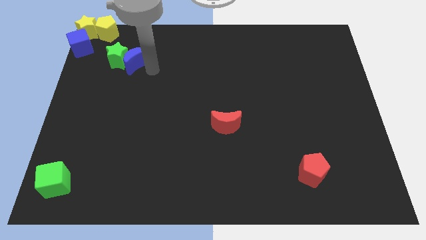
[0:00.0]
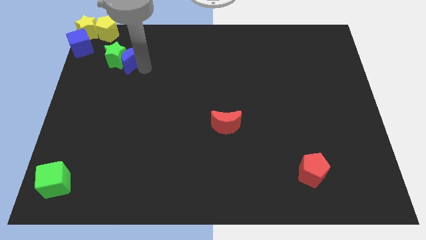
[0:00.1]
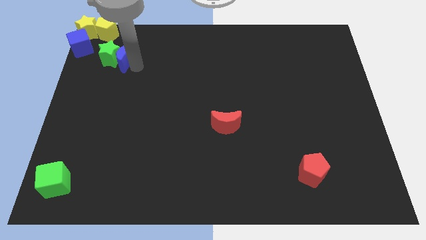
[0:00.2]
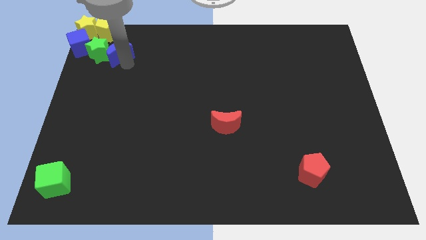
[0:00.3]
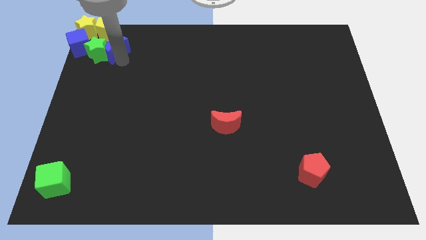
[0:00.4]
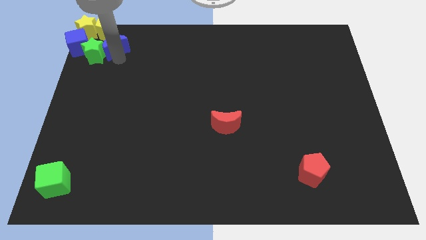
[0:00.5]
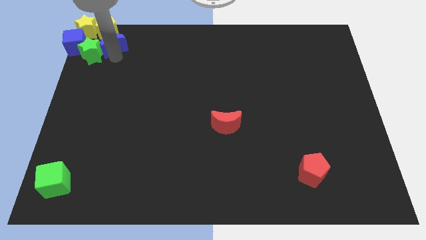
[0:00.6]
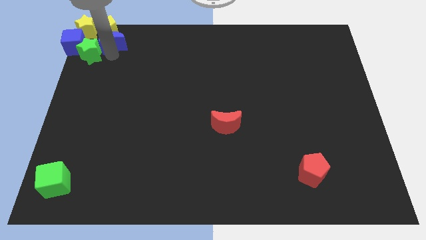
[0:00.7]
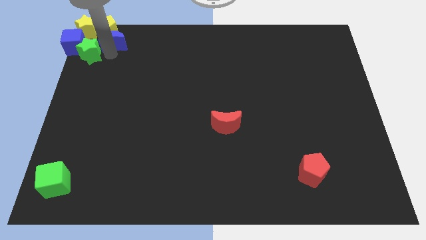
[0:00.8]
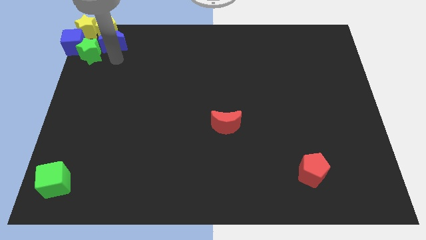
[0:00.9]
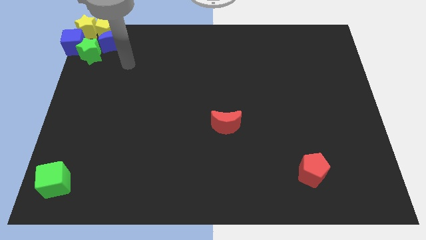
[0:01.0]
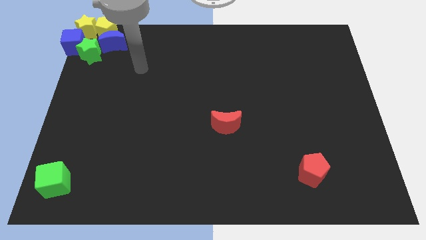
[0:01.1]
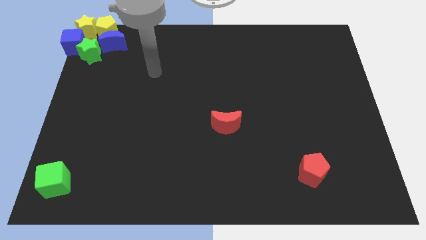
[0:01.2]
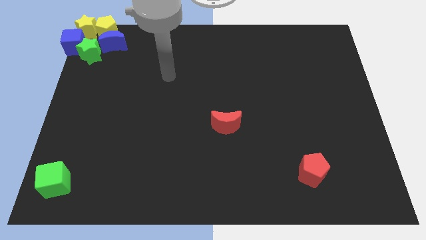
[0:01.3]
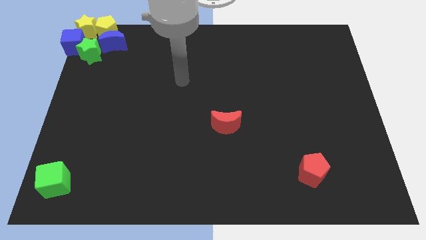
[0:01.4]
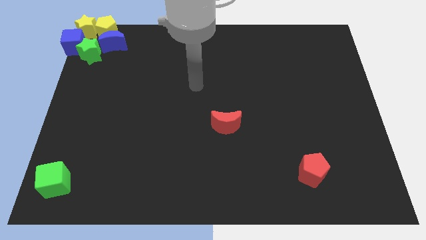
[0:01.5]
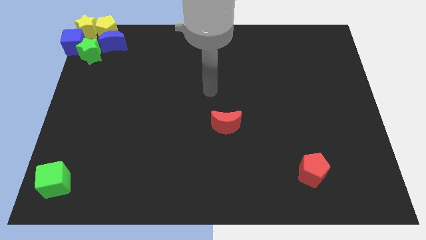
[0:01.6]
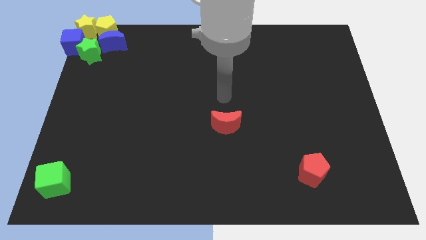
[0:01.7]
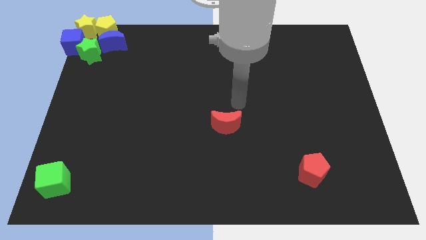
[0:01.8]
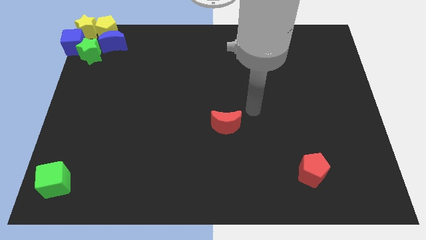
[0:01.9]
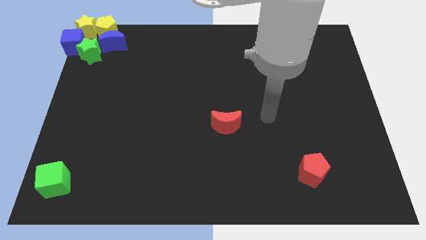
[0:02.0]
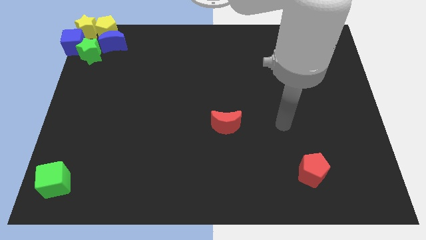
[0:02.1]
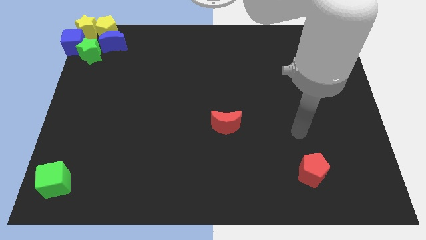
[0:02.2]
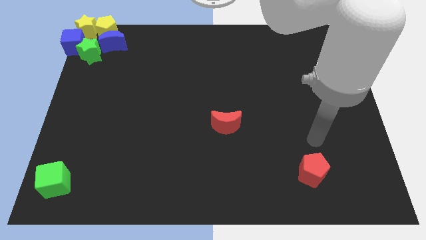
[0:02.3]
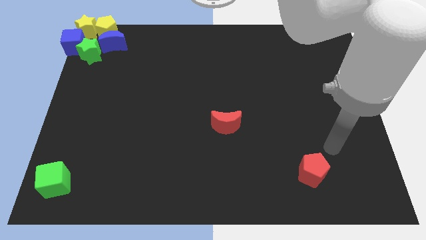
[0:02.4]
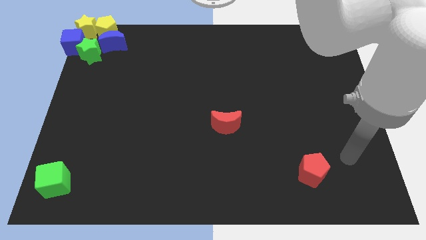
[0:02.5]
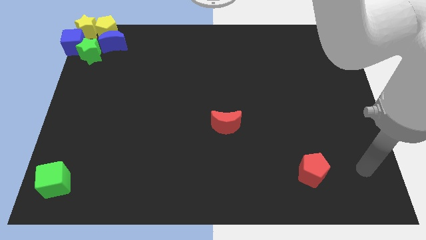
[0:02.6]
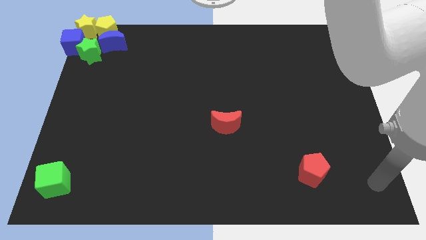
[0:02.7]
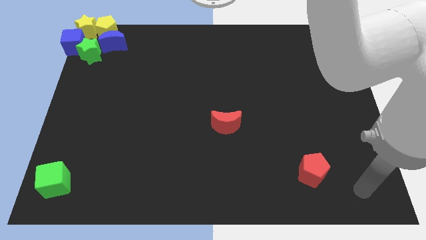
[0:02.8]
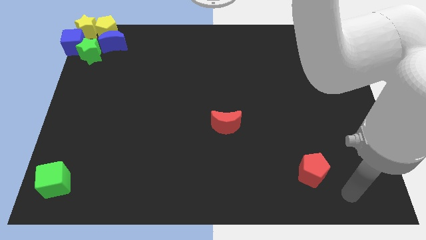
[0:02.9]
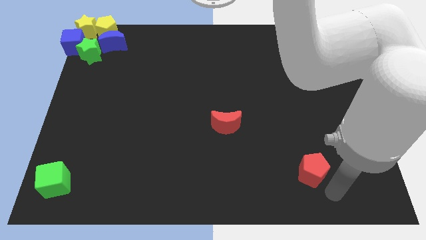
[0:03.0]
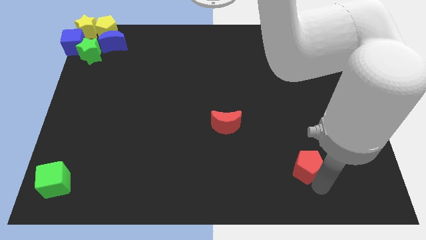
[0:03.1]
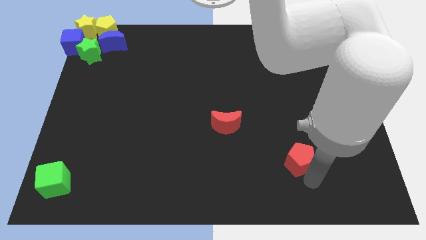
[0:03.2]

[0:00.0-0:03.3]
place the arm diagonal to the red pentagon

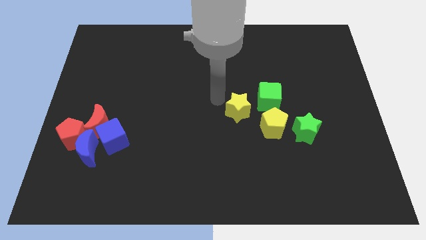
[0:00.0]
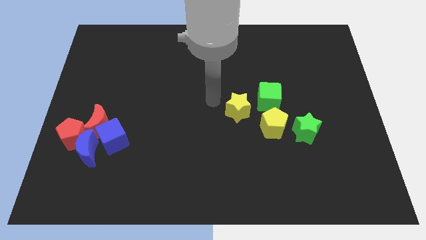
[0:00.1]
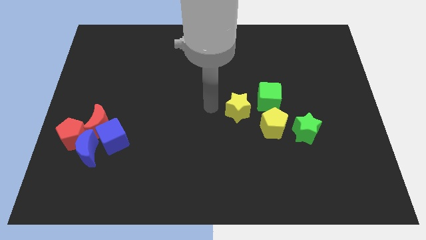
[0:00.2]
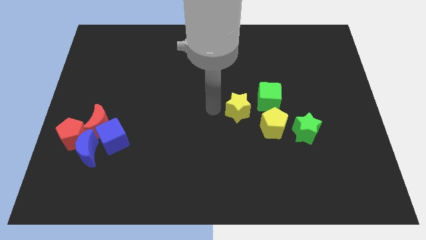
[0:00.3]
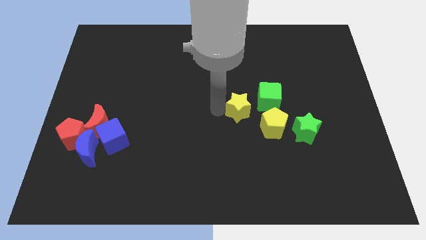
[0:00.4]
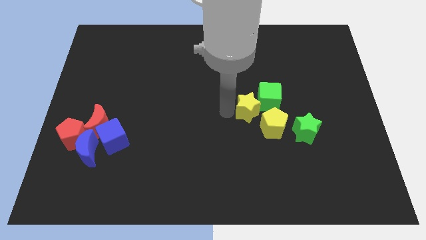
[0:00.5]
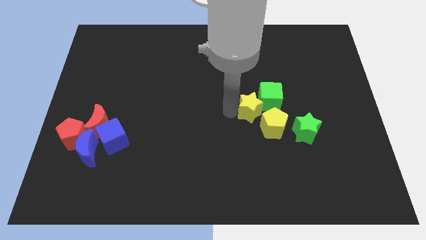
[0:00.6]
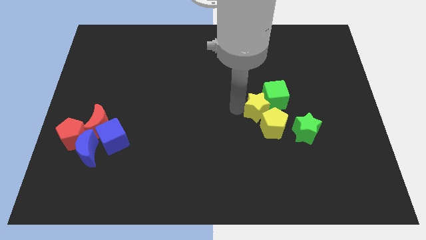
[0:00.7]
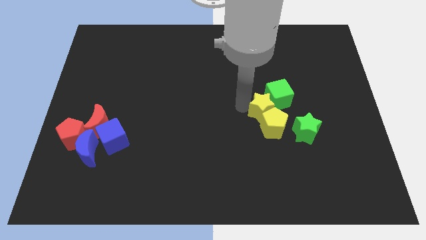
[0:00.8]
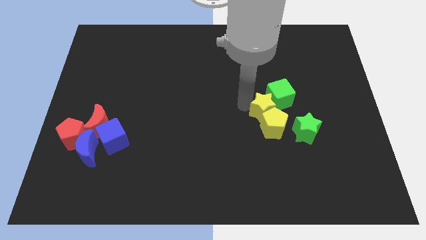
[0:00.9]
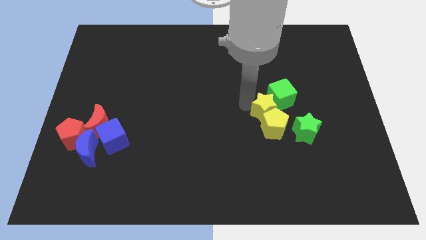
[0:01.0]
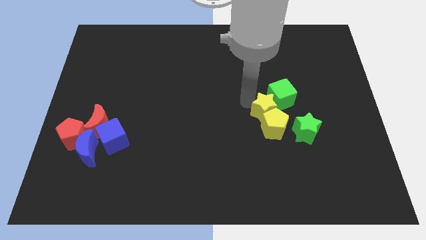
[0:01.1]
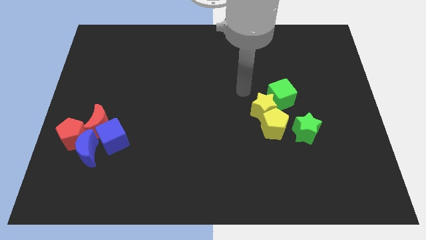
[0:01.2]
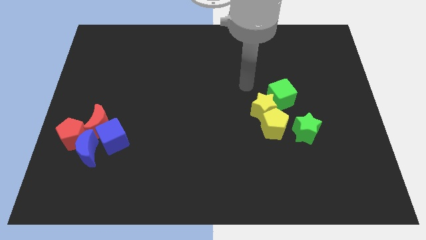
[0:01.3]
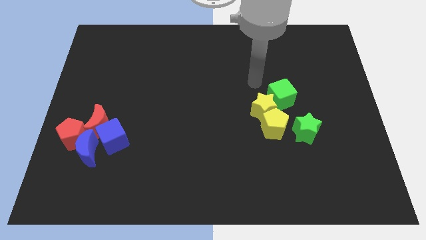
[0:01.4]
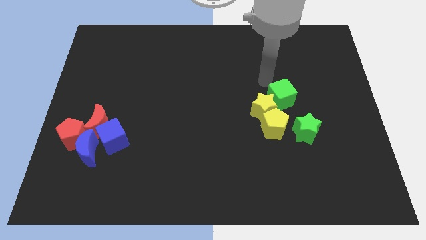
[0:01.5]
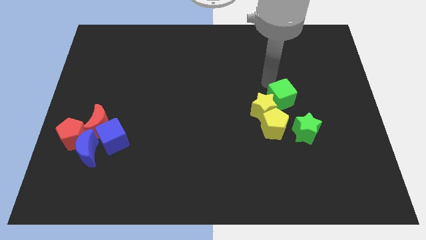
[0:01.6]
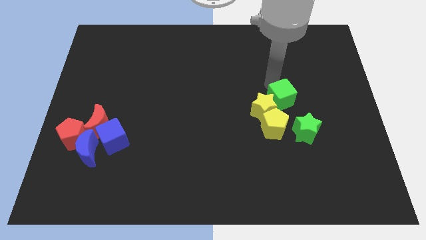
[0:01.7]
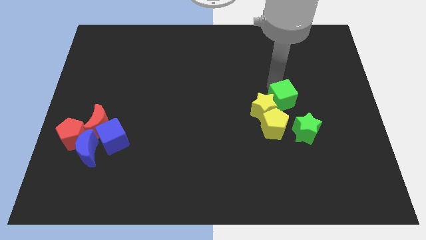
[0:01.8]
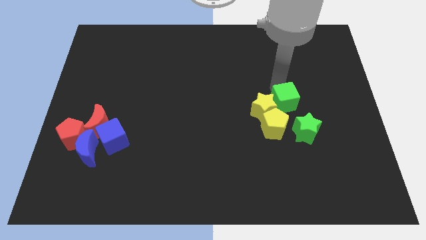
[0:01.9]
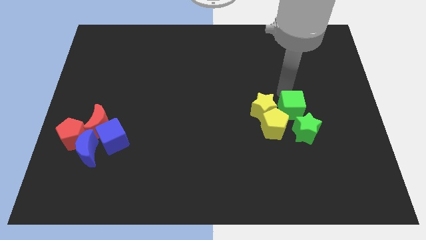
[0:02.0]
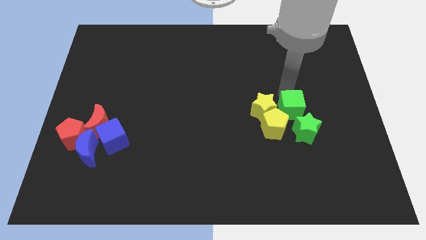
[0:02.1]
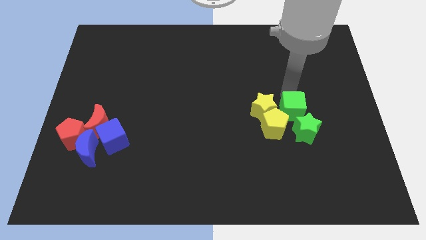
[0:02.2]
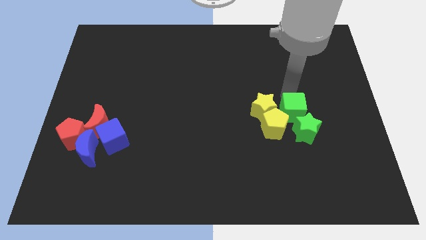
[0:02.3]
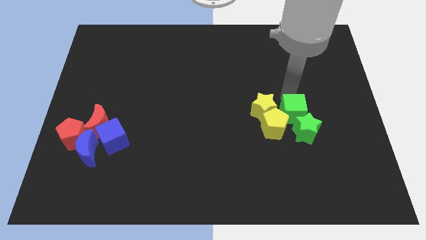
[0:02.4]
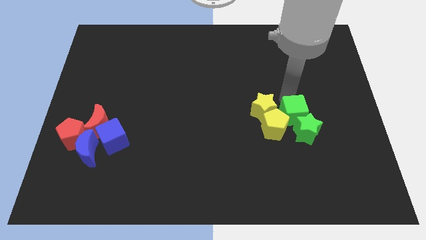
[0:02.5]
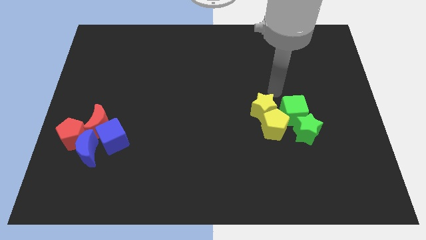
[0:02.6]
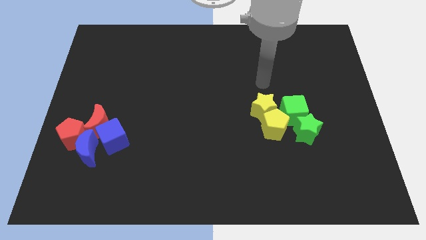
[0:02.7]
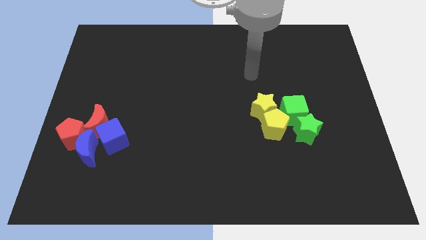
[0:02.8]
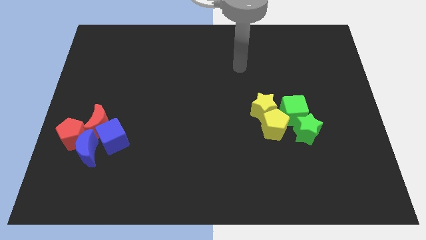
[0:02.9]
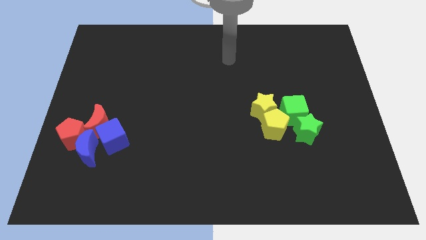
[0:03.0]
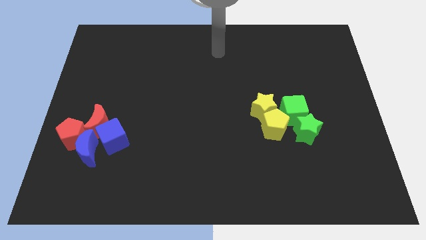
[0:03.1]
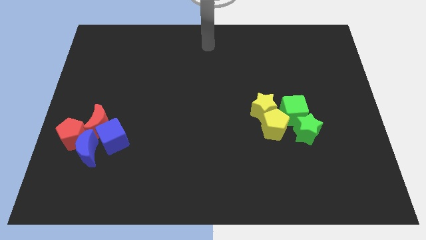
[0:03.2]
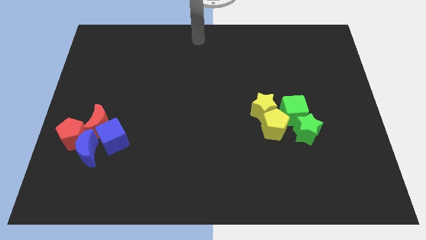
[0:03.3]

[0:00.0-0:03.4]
place the green cube parallel right to the yellow star

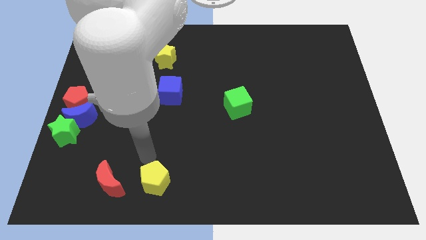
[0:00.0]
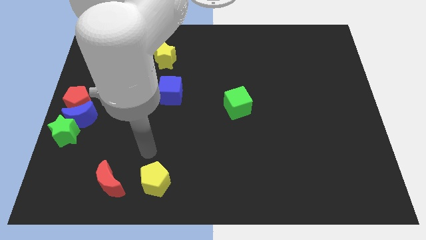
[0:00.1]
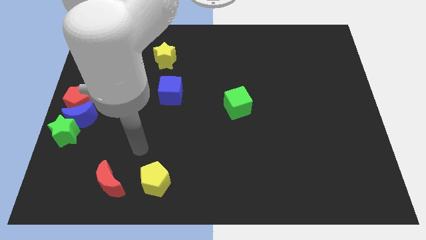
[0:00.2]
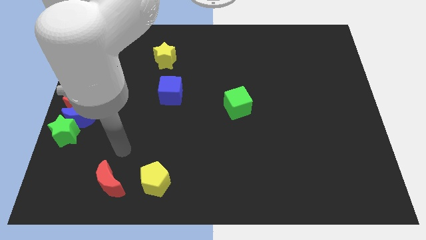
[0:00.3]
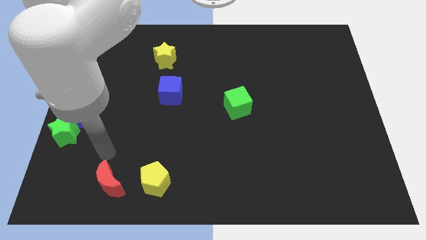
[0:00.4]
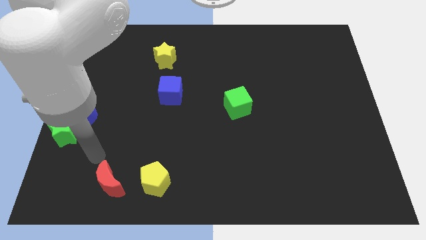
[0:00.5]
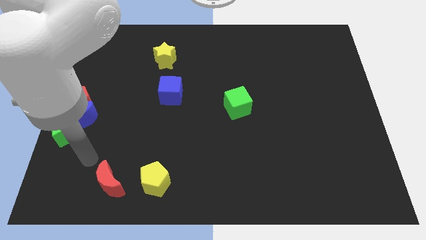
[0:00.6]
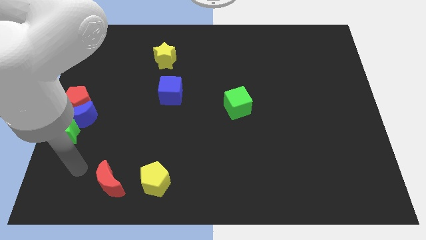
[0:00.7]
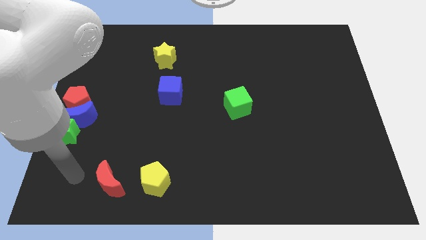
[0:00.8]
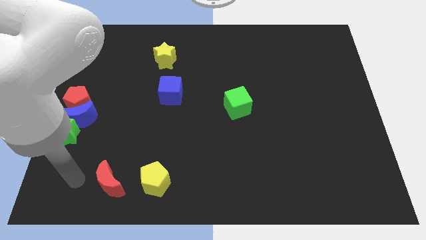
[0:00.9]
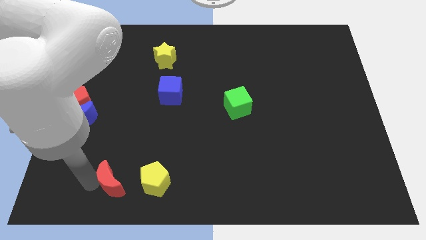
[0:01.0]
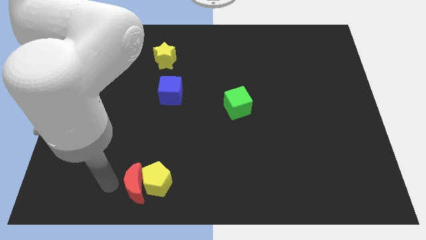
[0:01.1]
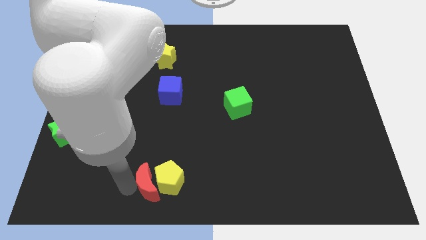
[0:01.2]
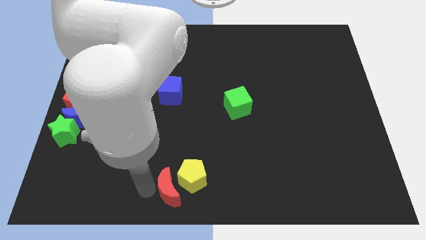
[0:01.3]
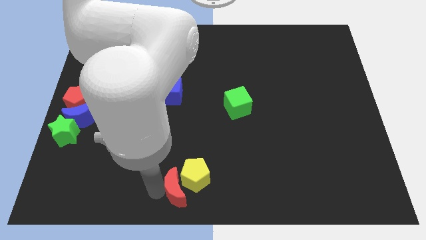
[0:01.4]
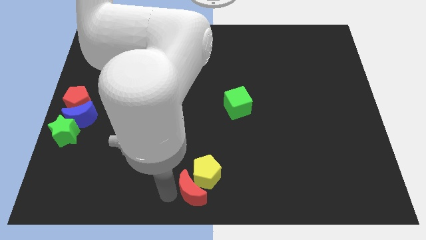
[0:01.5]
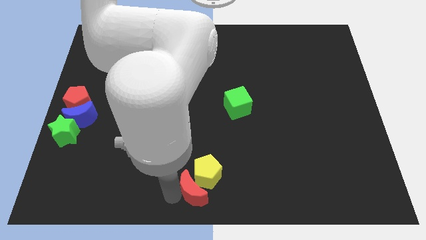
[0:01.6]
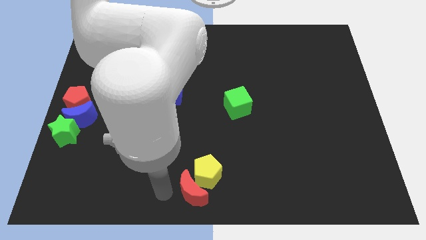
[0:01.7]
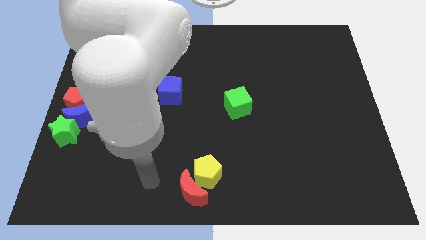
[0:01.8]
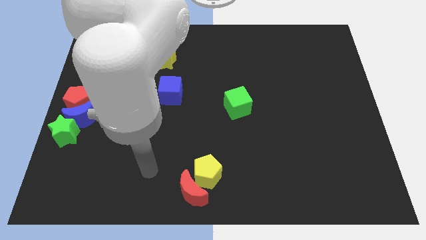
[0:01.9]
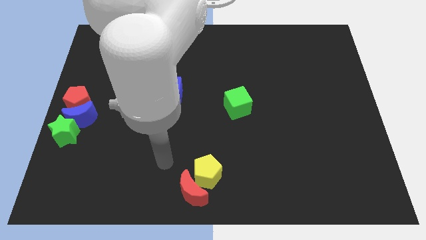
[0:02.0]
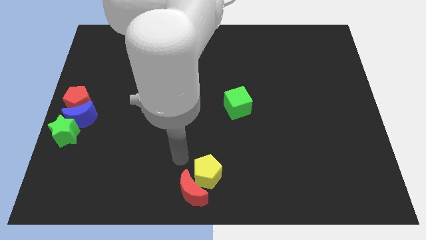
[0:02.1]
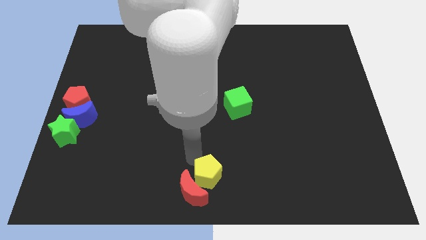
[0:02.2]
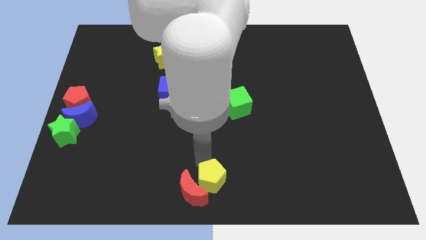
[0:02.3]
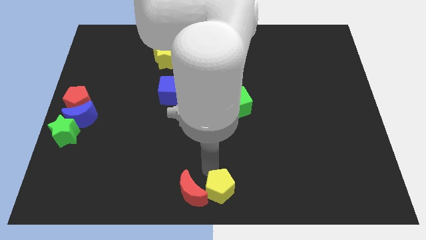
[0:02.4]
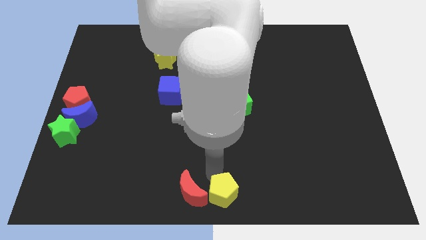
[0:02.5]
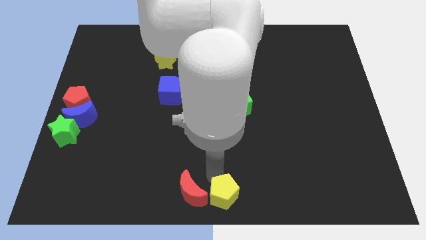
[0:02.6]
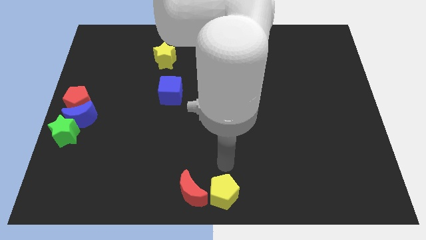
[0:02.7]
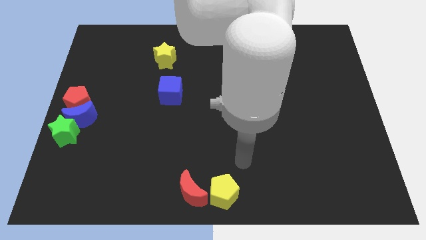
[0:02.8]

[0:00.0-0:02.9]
push the red moon into the yellow pentagon
